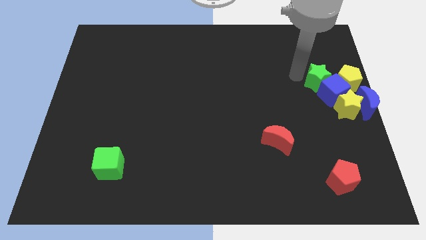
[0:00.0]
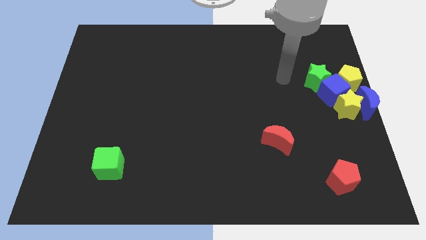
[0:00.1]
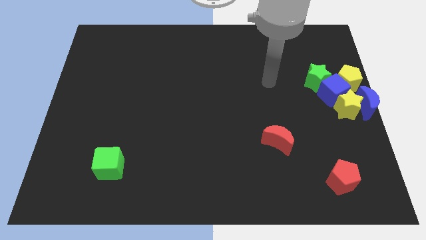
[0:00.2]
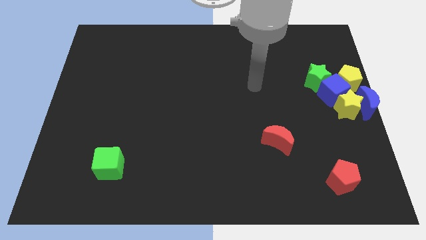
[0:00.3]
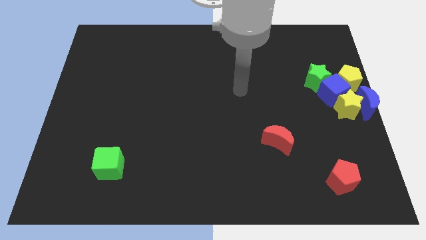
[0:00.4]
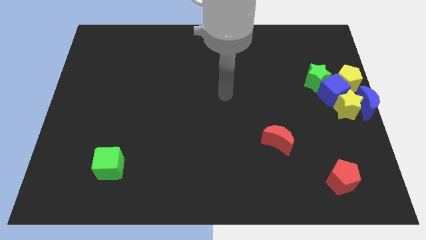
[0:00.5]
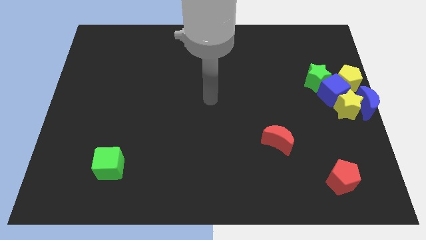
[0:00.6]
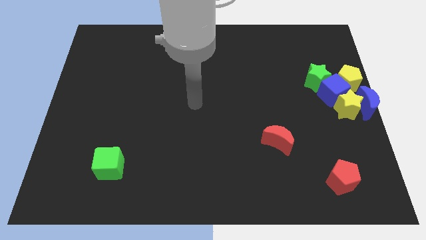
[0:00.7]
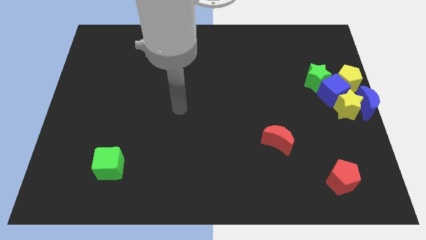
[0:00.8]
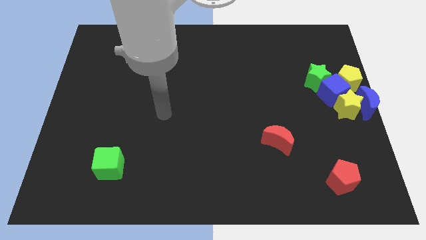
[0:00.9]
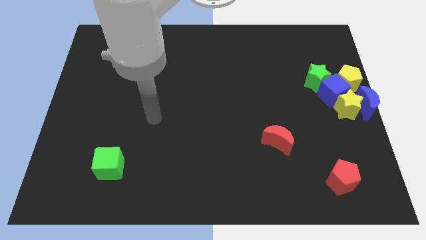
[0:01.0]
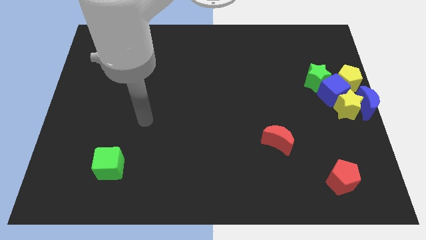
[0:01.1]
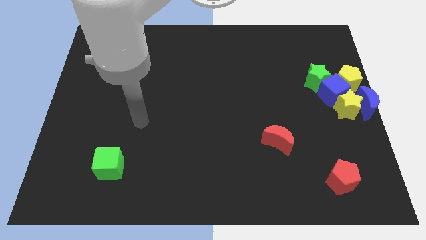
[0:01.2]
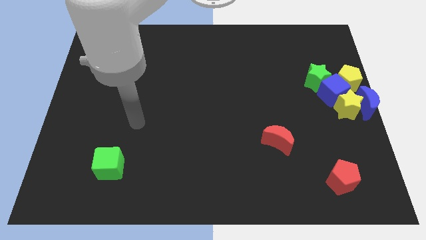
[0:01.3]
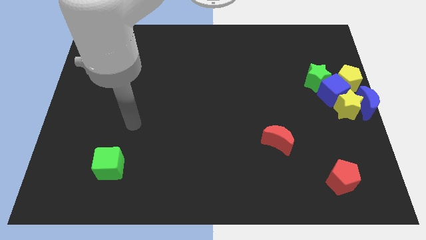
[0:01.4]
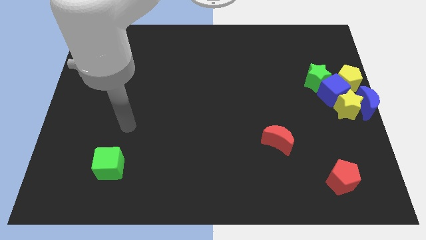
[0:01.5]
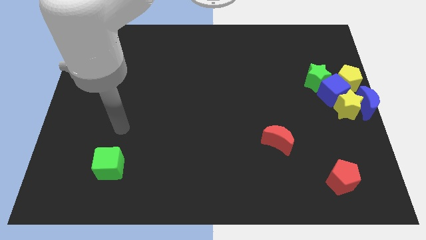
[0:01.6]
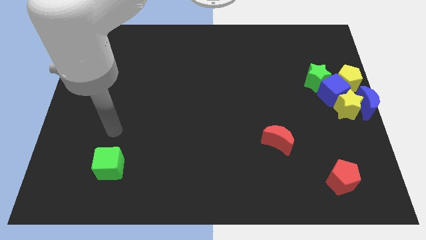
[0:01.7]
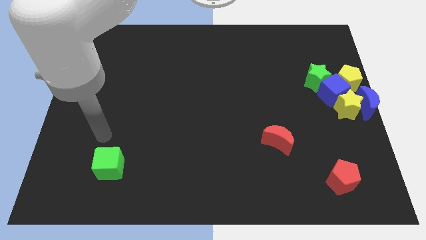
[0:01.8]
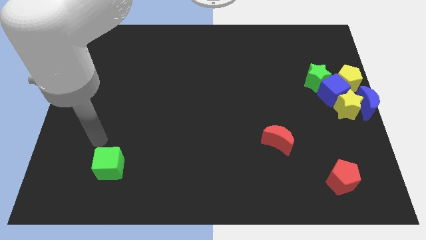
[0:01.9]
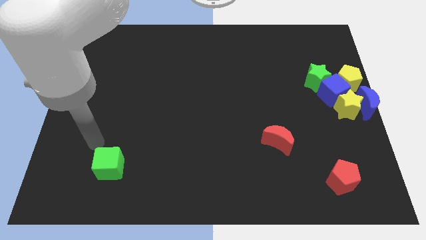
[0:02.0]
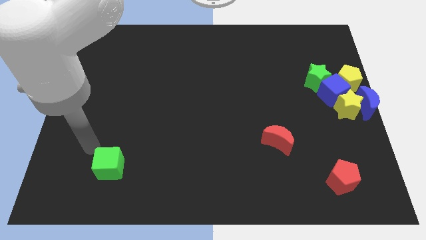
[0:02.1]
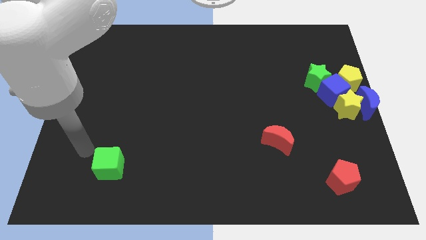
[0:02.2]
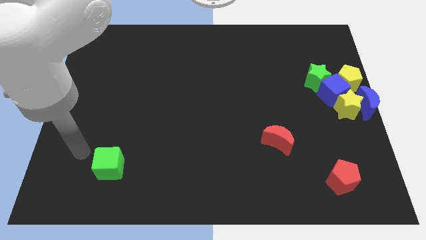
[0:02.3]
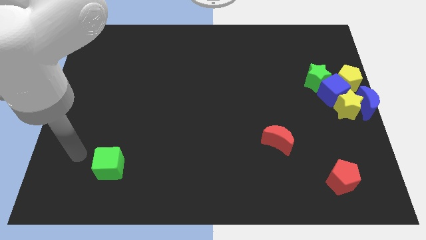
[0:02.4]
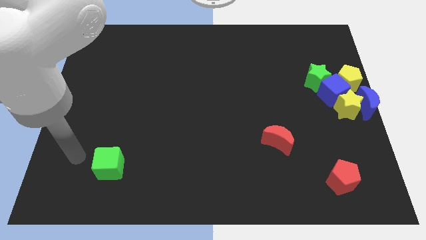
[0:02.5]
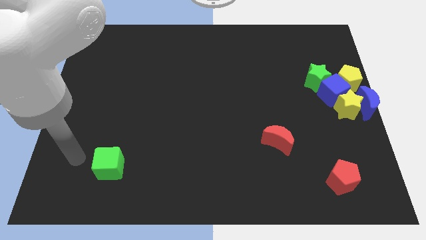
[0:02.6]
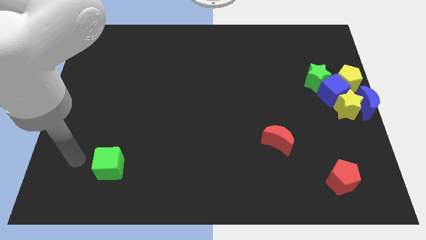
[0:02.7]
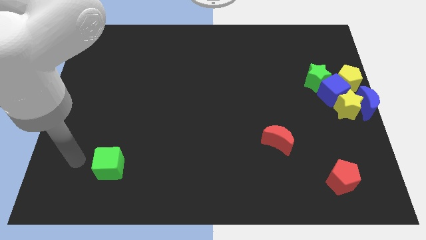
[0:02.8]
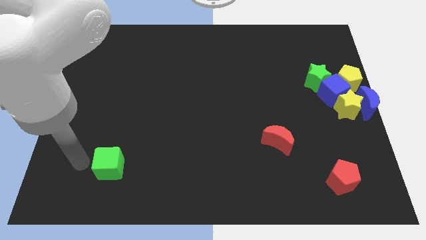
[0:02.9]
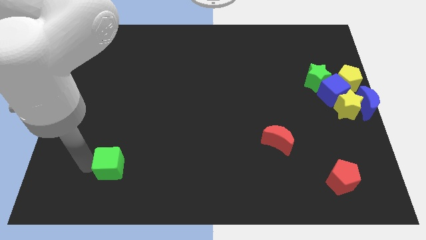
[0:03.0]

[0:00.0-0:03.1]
move your arm left to the green cube

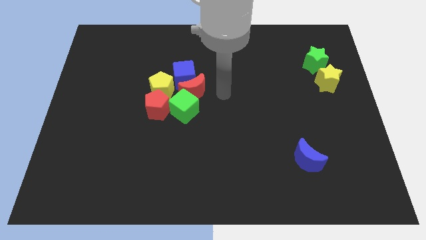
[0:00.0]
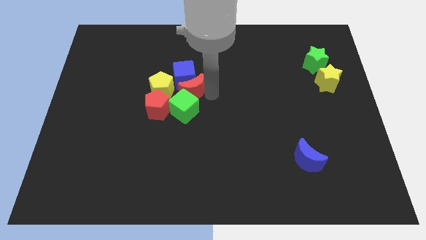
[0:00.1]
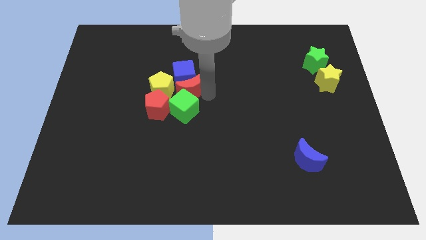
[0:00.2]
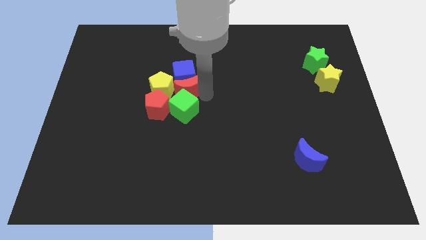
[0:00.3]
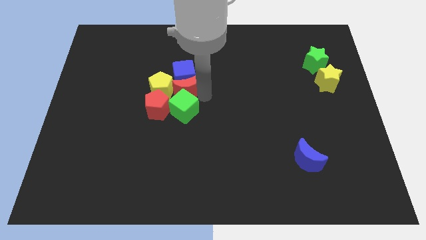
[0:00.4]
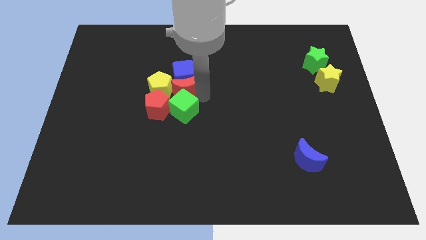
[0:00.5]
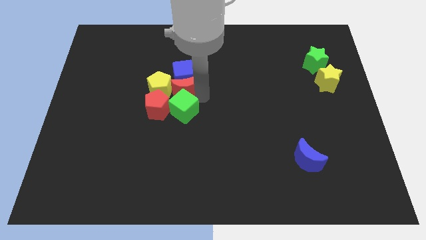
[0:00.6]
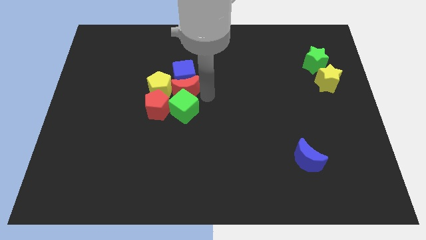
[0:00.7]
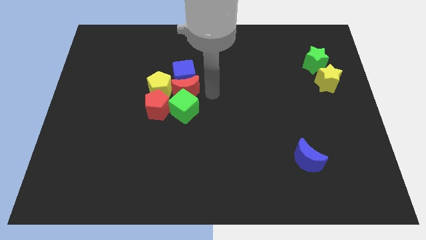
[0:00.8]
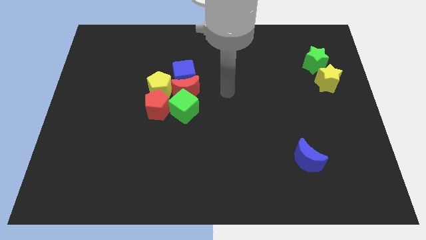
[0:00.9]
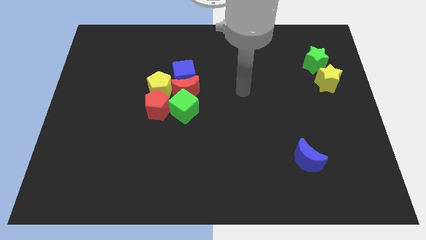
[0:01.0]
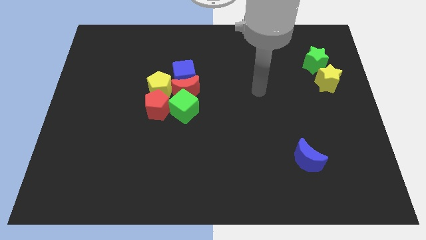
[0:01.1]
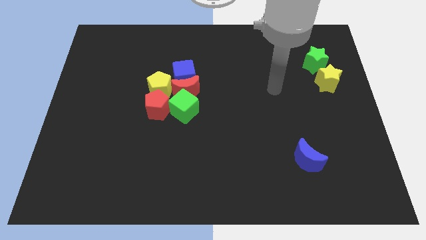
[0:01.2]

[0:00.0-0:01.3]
push the red crescent slightly to its left

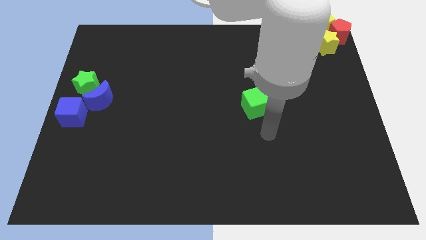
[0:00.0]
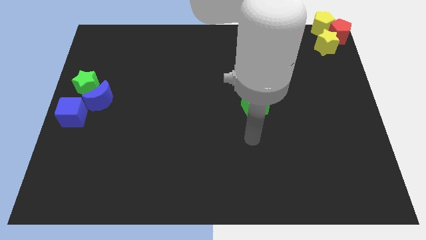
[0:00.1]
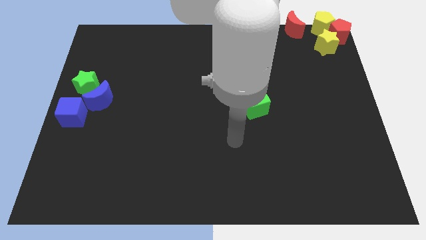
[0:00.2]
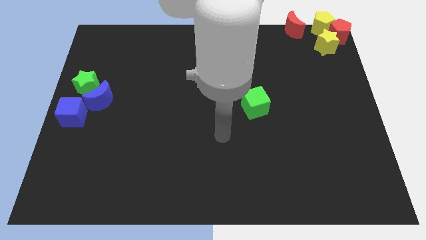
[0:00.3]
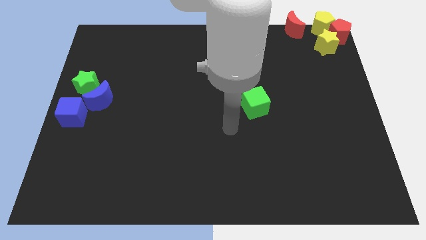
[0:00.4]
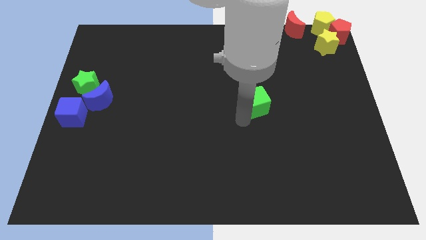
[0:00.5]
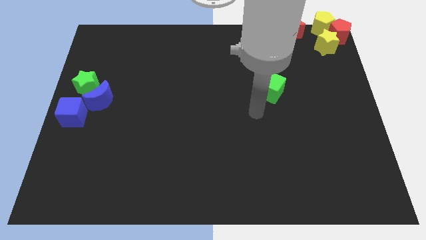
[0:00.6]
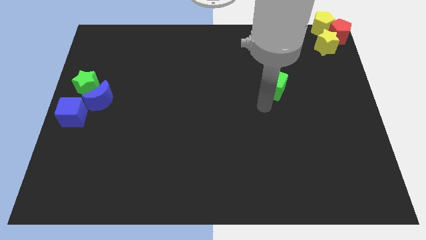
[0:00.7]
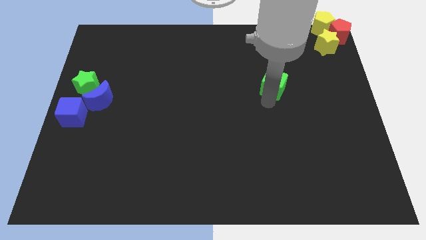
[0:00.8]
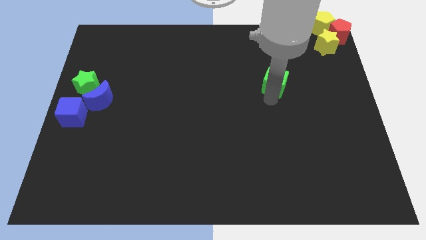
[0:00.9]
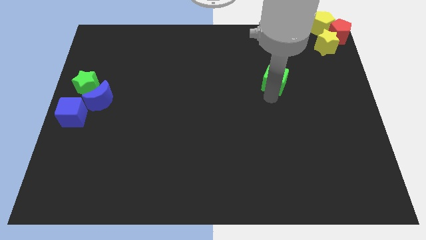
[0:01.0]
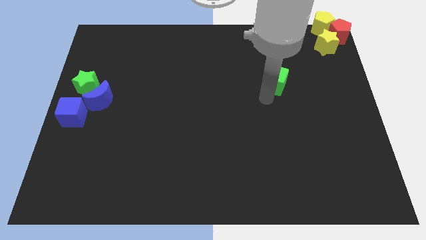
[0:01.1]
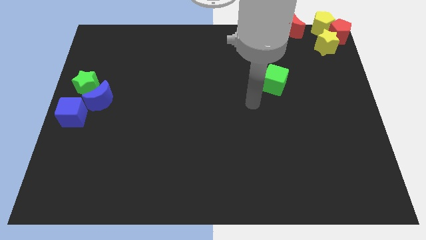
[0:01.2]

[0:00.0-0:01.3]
push the green cube towards the left of yellow star

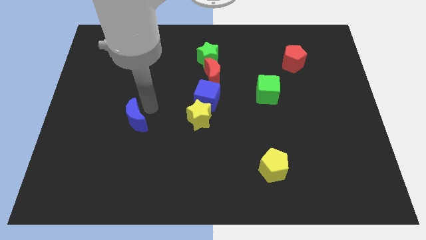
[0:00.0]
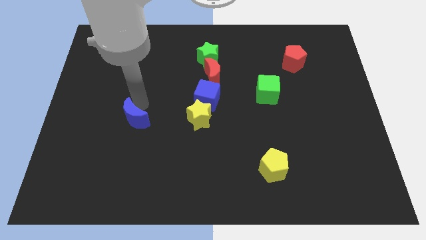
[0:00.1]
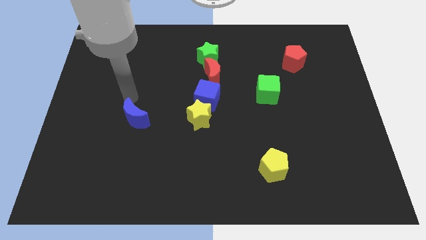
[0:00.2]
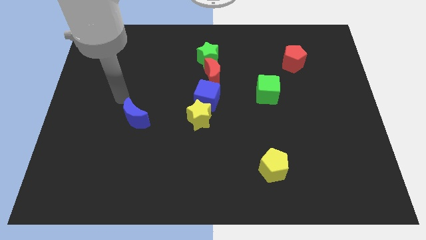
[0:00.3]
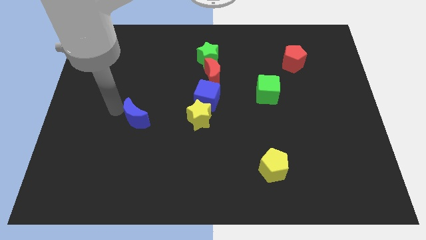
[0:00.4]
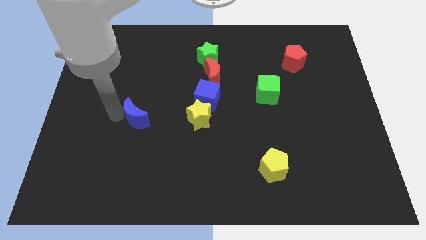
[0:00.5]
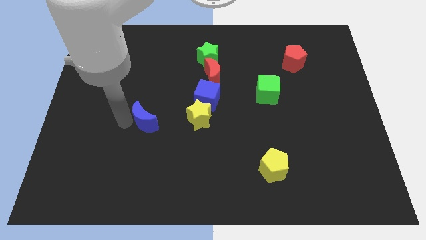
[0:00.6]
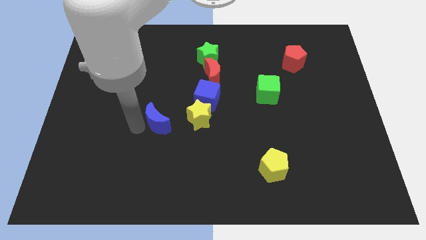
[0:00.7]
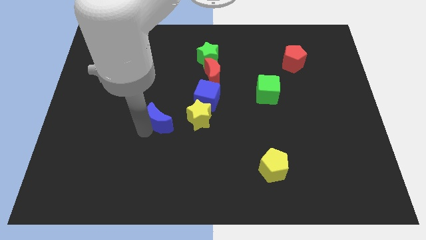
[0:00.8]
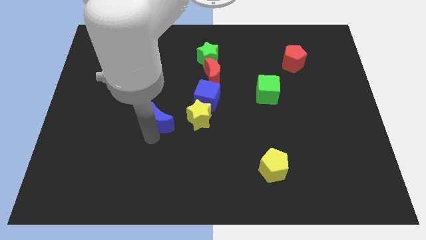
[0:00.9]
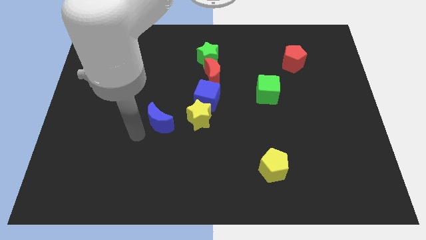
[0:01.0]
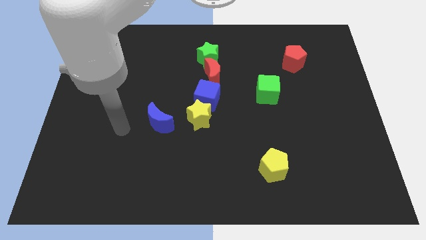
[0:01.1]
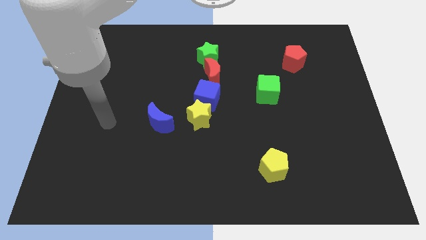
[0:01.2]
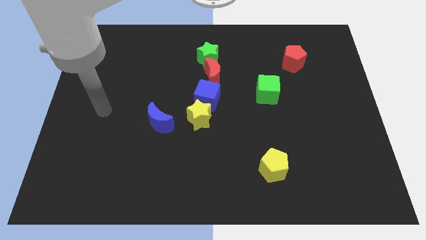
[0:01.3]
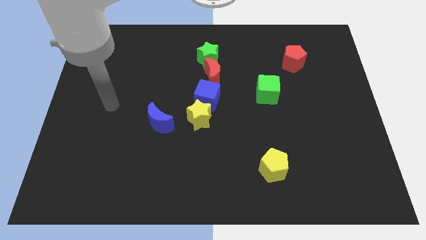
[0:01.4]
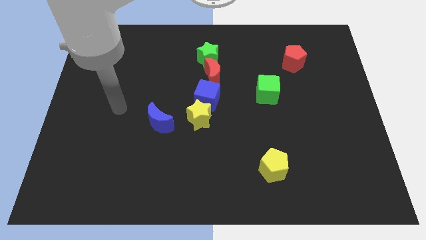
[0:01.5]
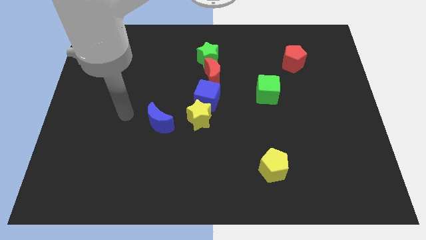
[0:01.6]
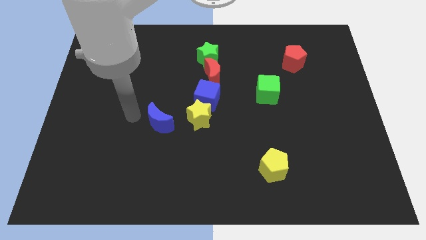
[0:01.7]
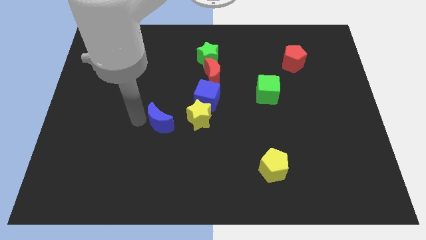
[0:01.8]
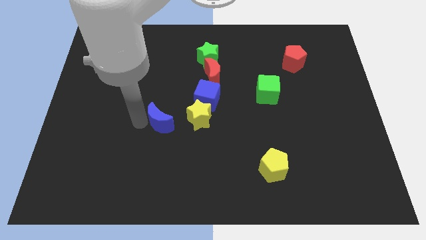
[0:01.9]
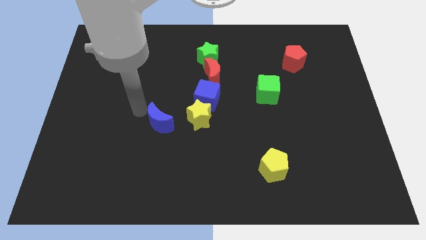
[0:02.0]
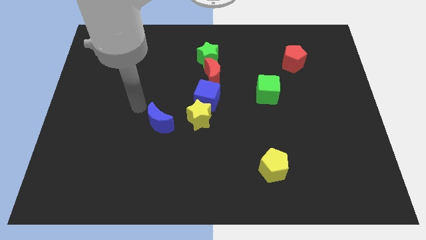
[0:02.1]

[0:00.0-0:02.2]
slide the blue moon towards the yellow star

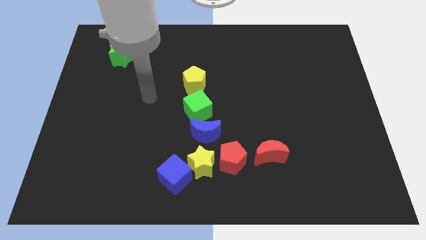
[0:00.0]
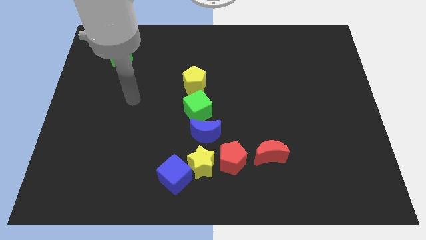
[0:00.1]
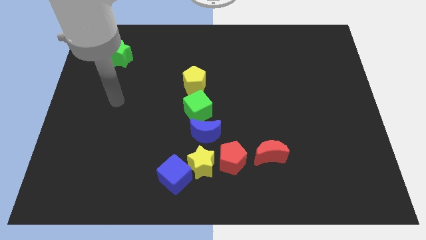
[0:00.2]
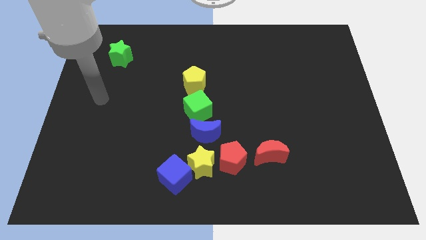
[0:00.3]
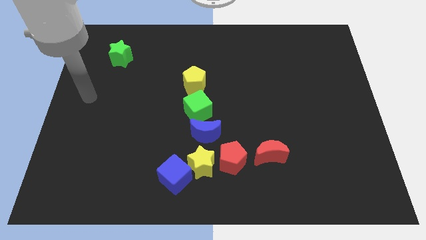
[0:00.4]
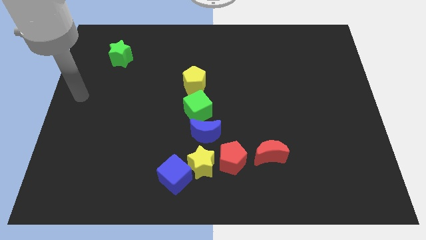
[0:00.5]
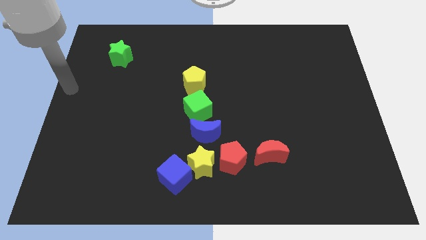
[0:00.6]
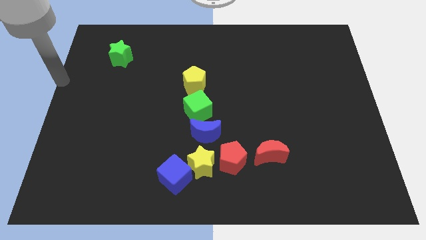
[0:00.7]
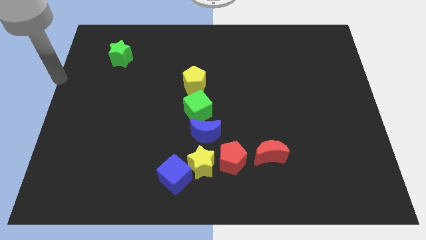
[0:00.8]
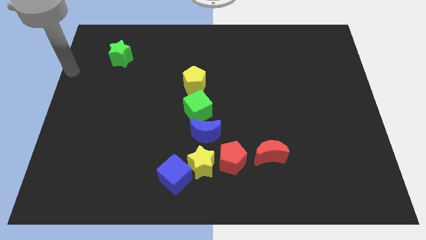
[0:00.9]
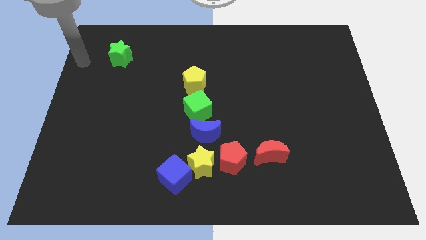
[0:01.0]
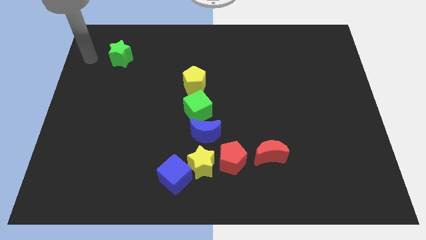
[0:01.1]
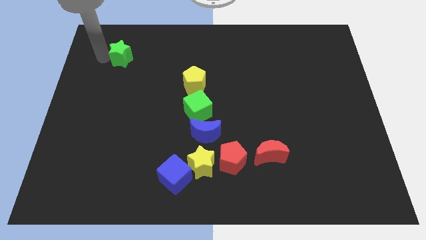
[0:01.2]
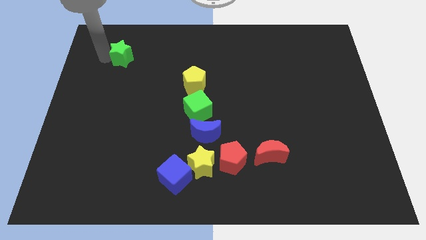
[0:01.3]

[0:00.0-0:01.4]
point your arm to the left of green star
